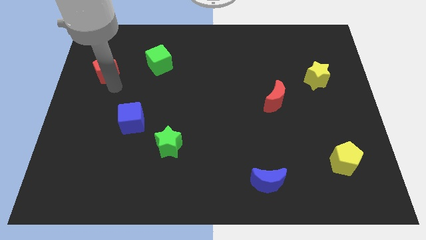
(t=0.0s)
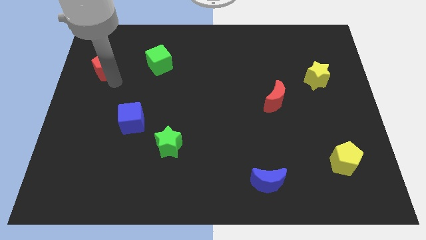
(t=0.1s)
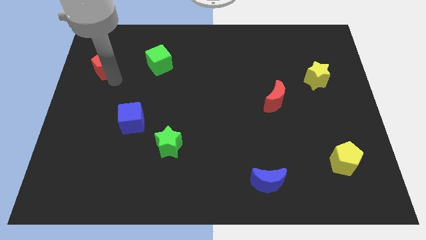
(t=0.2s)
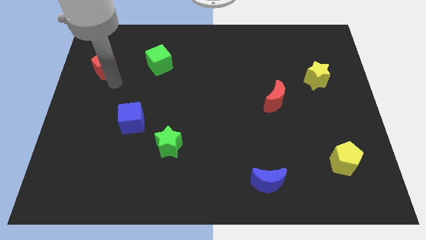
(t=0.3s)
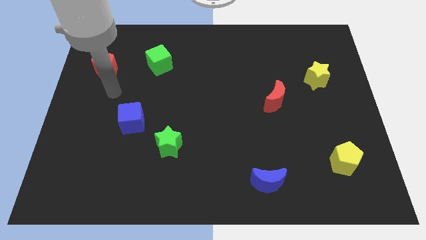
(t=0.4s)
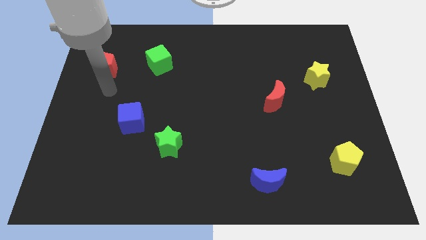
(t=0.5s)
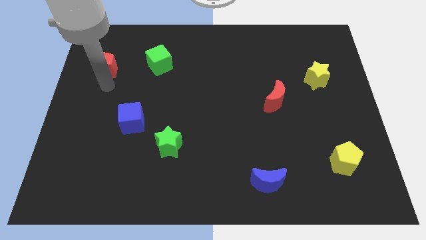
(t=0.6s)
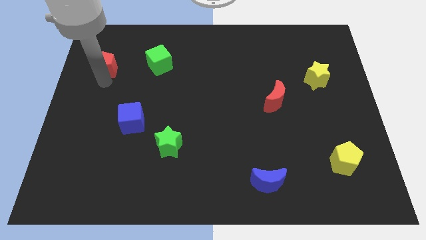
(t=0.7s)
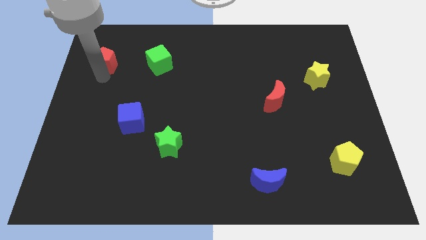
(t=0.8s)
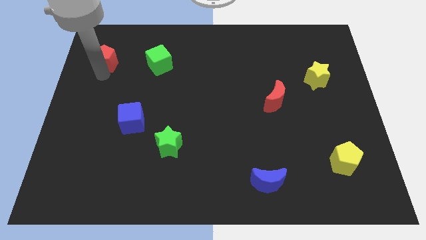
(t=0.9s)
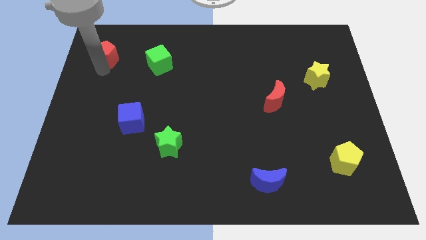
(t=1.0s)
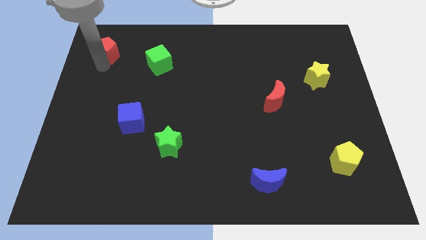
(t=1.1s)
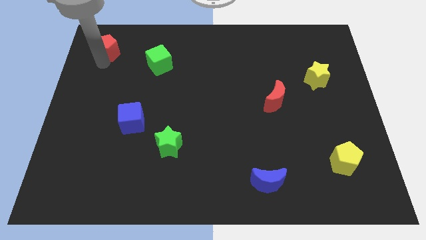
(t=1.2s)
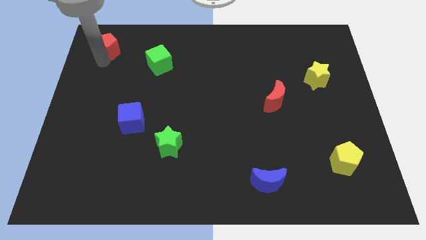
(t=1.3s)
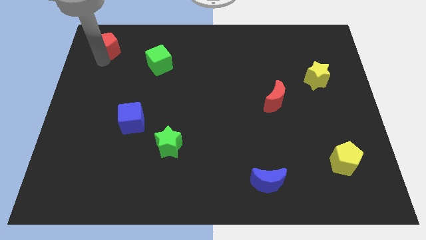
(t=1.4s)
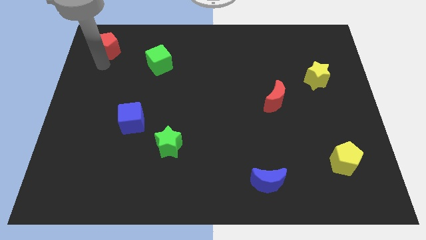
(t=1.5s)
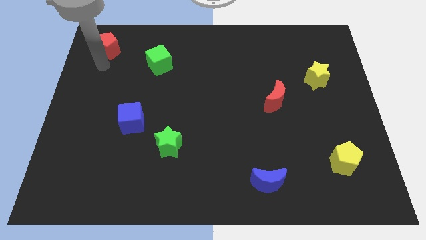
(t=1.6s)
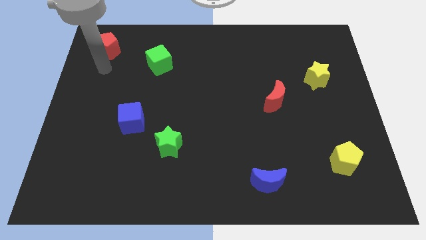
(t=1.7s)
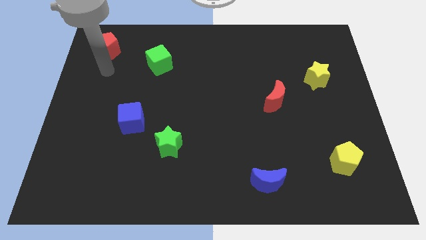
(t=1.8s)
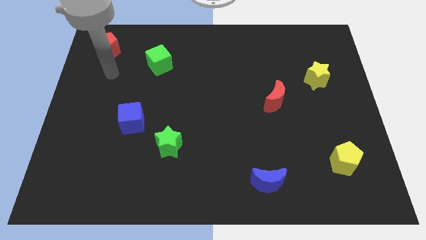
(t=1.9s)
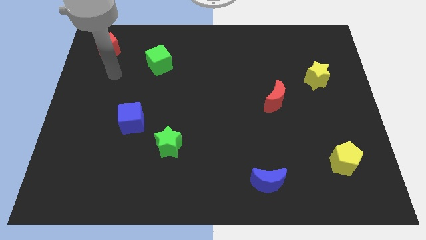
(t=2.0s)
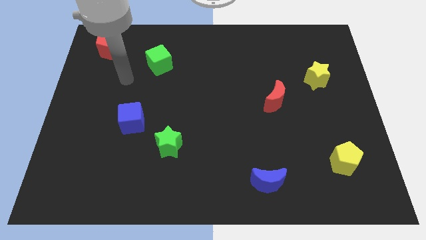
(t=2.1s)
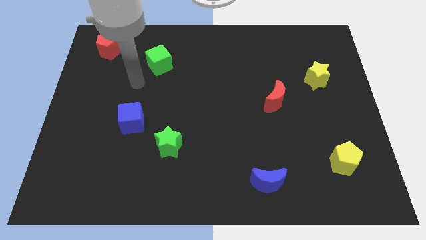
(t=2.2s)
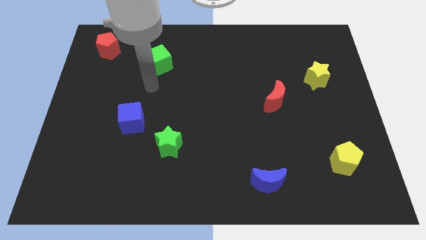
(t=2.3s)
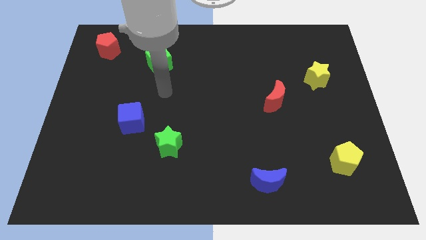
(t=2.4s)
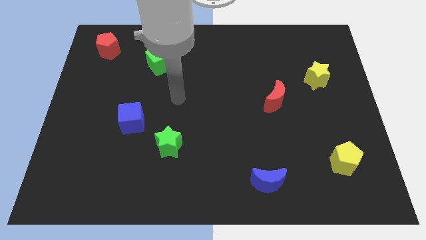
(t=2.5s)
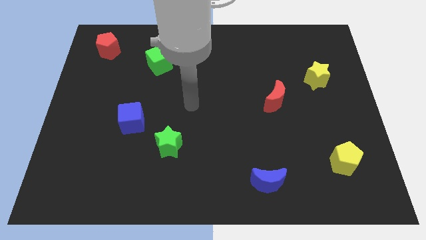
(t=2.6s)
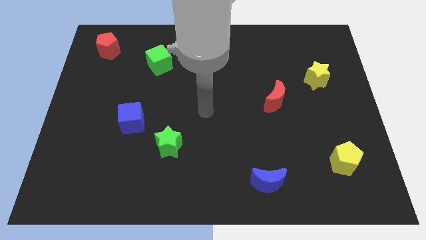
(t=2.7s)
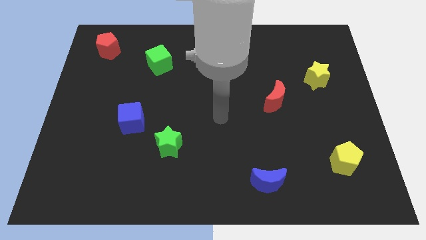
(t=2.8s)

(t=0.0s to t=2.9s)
place the red pentagon diagonally above the cube

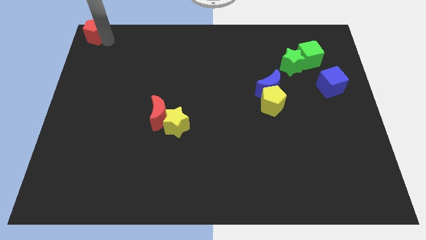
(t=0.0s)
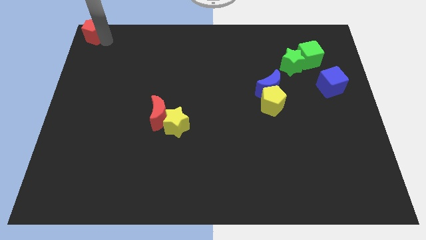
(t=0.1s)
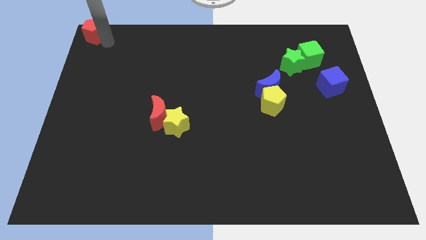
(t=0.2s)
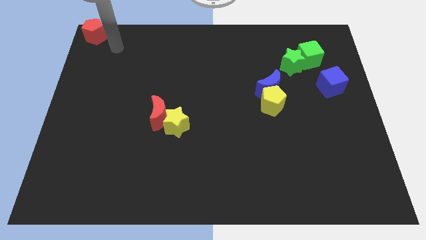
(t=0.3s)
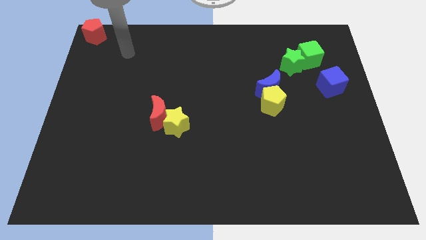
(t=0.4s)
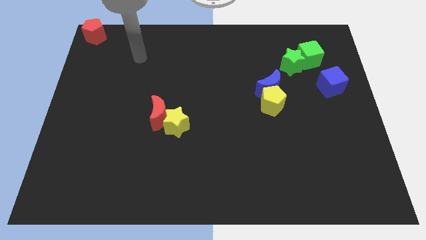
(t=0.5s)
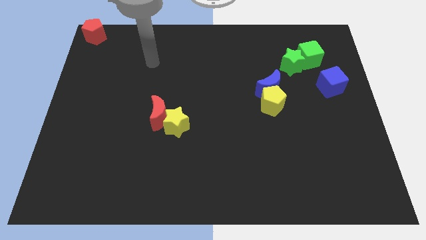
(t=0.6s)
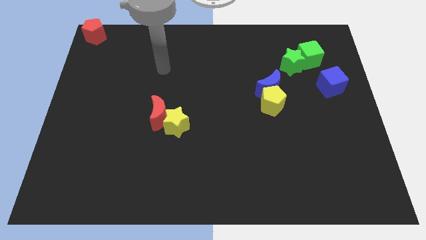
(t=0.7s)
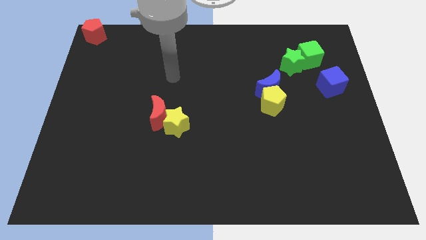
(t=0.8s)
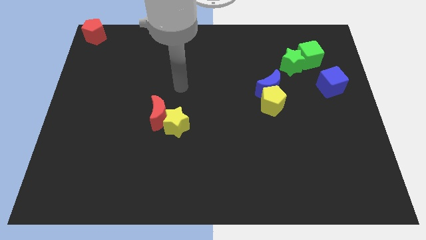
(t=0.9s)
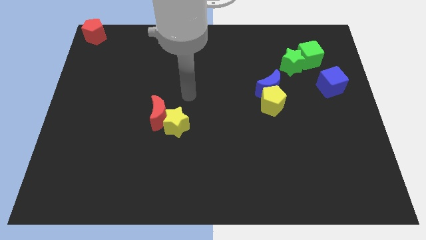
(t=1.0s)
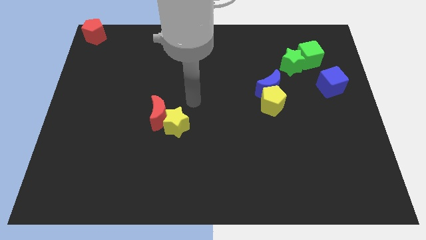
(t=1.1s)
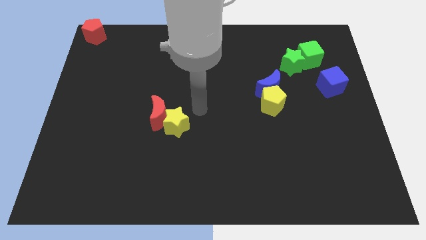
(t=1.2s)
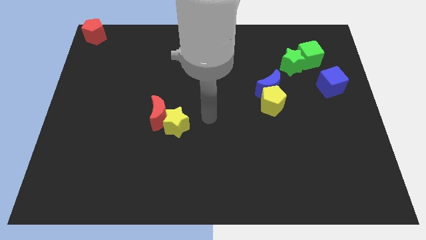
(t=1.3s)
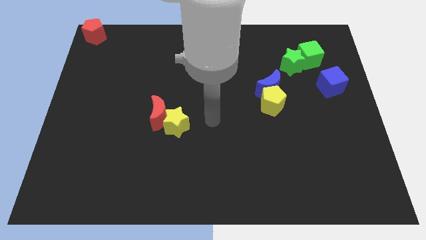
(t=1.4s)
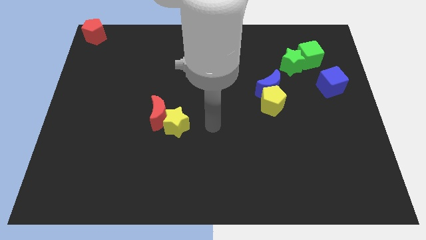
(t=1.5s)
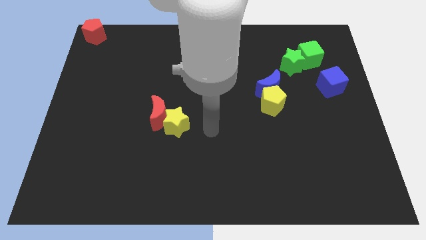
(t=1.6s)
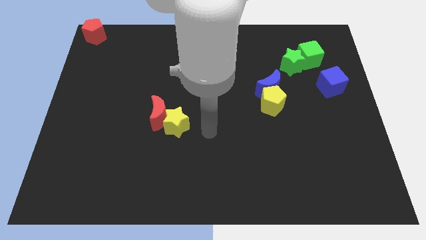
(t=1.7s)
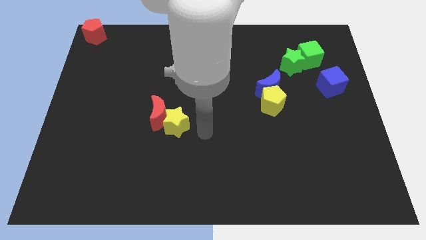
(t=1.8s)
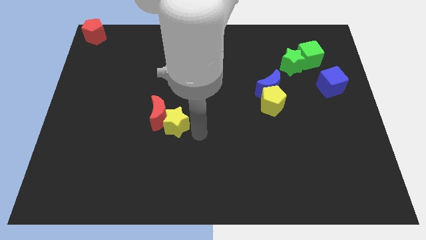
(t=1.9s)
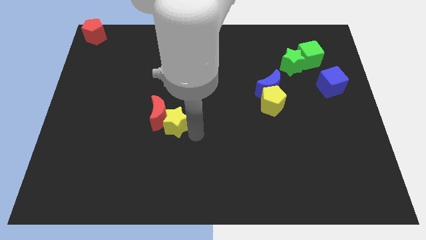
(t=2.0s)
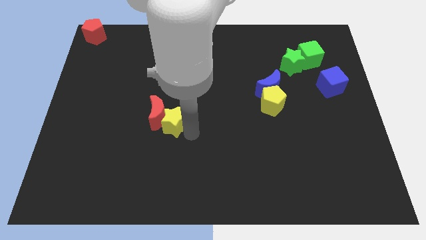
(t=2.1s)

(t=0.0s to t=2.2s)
place the arm to the right of the yellow star

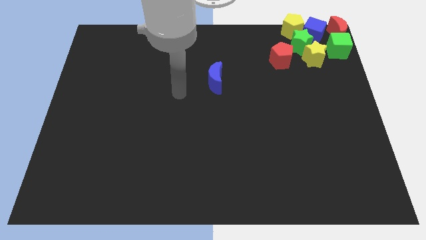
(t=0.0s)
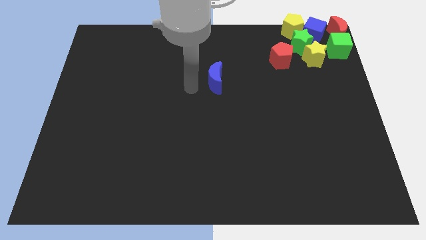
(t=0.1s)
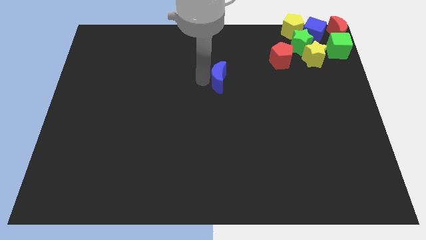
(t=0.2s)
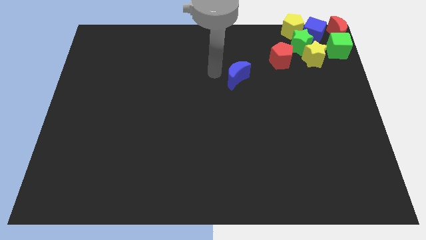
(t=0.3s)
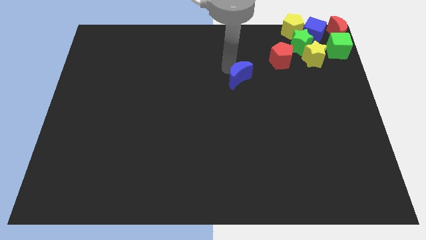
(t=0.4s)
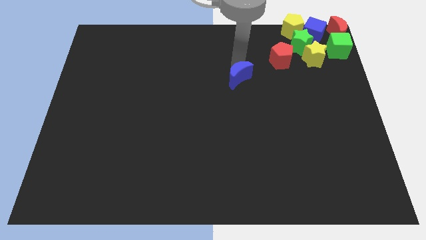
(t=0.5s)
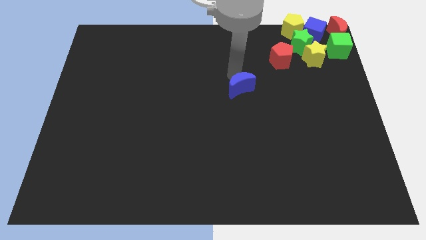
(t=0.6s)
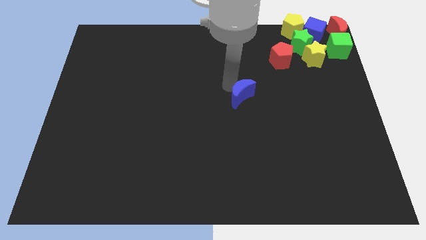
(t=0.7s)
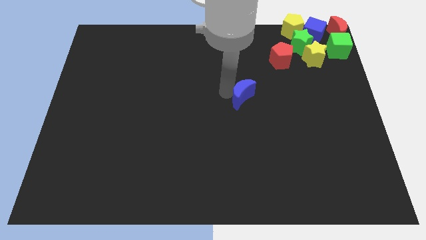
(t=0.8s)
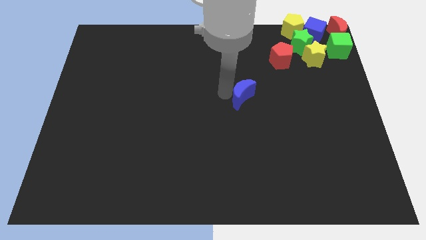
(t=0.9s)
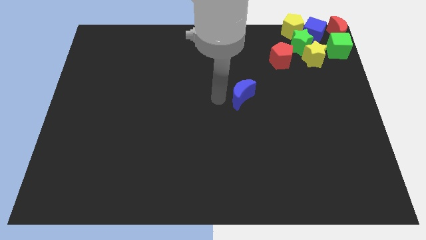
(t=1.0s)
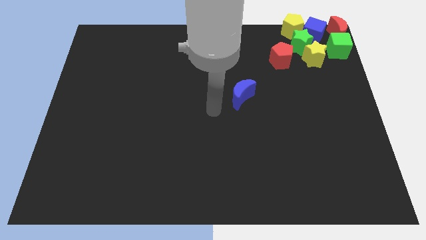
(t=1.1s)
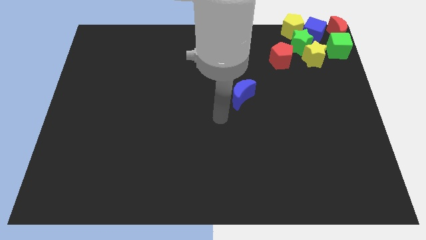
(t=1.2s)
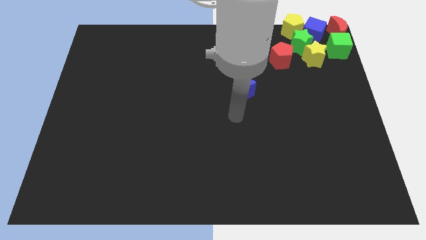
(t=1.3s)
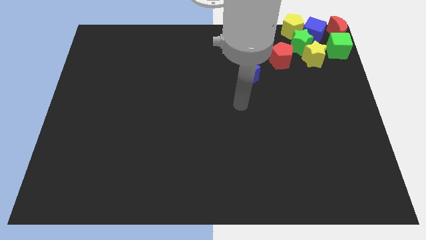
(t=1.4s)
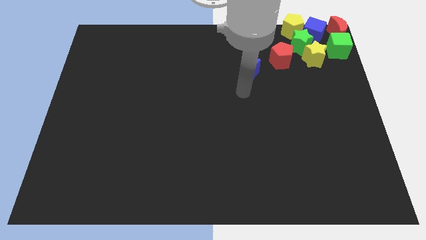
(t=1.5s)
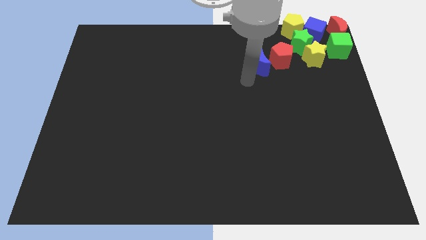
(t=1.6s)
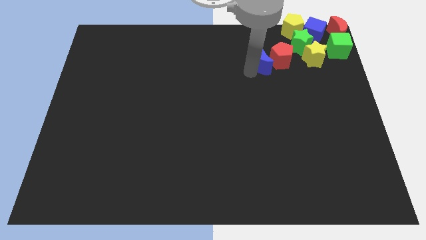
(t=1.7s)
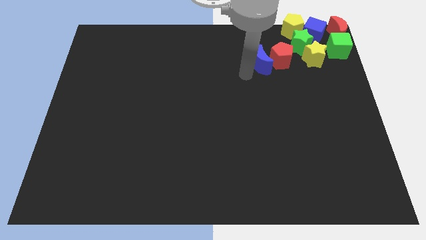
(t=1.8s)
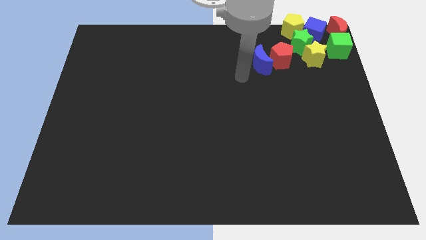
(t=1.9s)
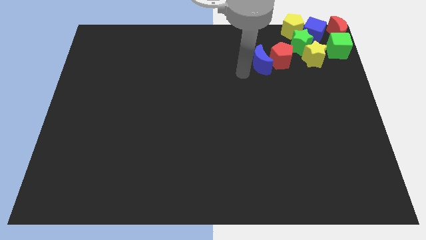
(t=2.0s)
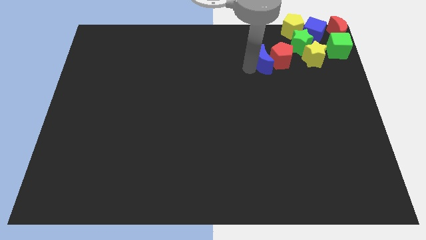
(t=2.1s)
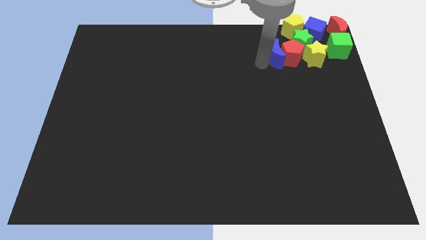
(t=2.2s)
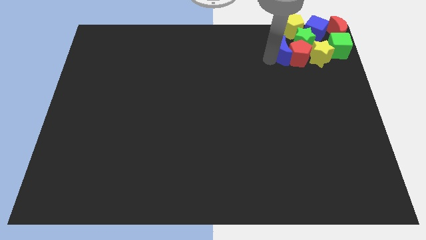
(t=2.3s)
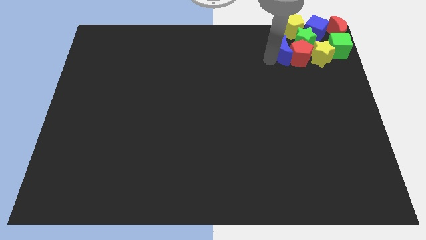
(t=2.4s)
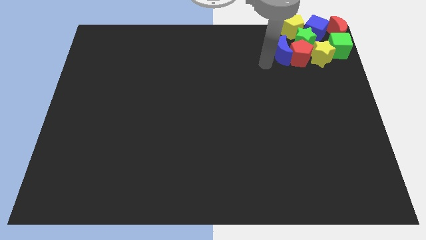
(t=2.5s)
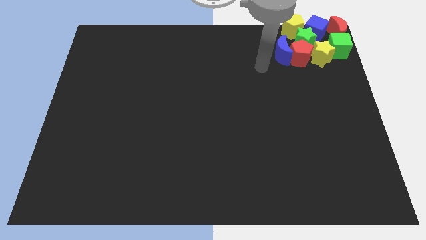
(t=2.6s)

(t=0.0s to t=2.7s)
push blue moon into left of red pentagon

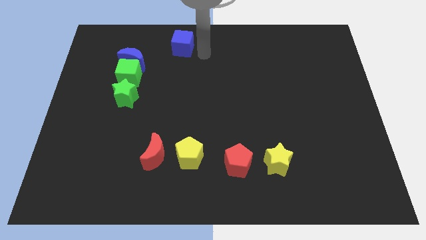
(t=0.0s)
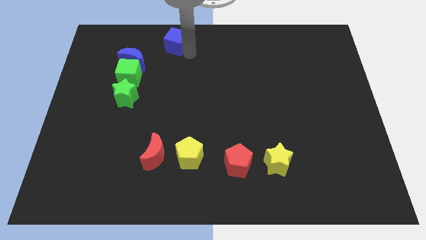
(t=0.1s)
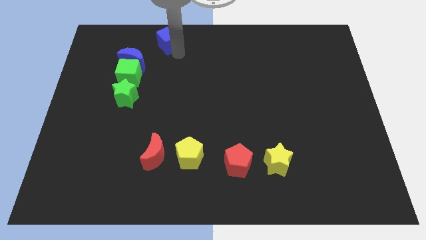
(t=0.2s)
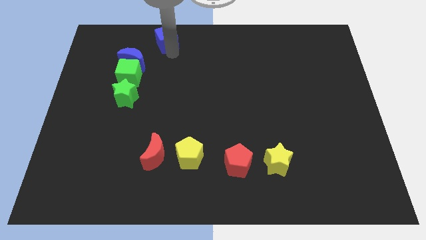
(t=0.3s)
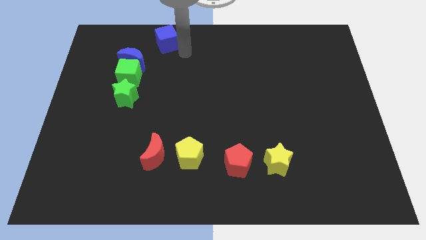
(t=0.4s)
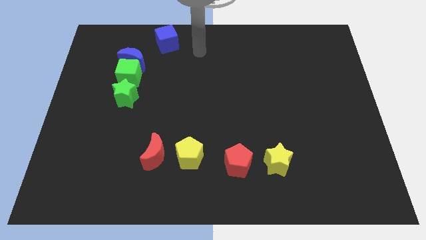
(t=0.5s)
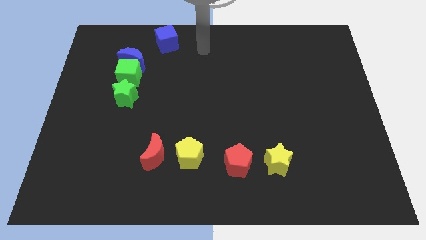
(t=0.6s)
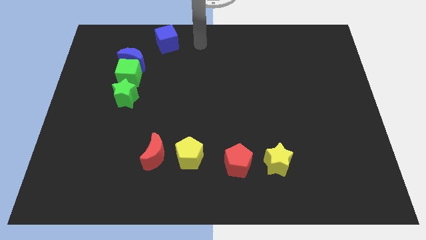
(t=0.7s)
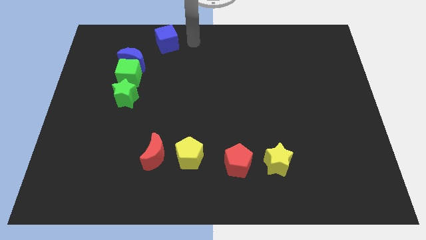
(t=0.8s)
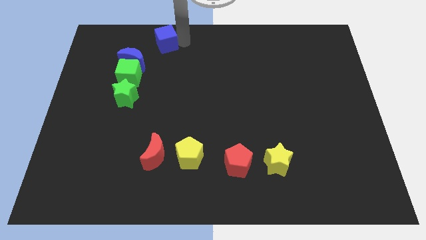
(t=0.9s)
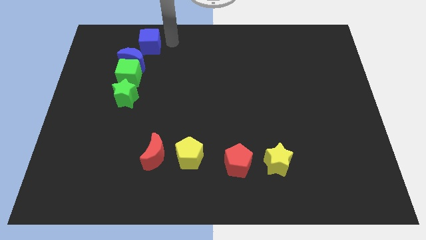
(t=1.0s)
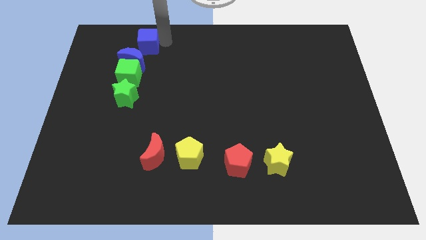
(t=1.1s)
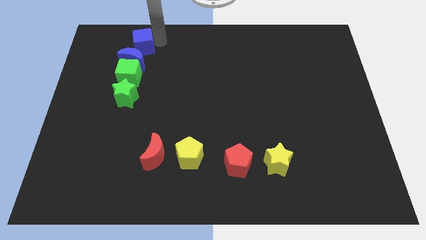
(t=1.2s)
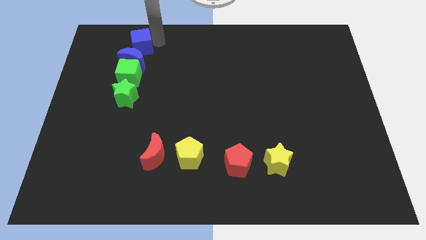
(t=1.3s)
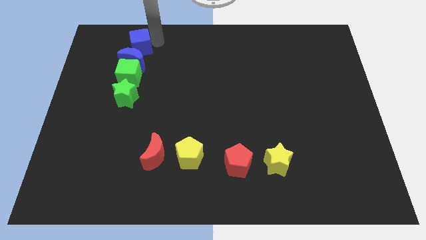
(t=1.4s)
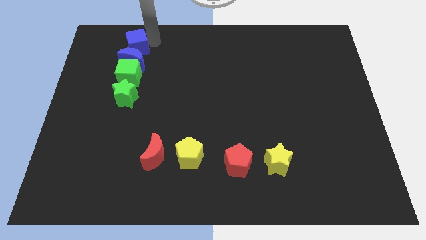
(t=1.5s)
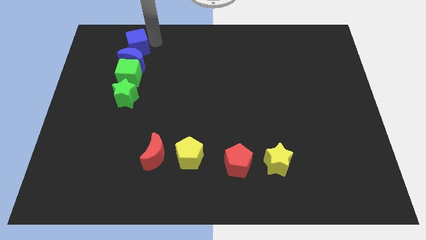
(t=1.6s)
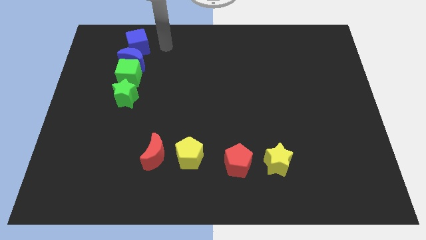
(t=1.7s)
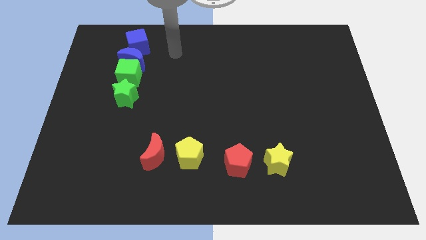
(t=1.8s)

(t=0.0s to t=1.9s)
move the blue cube towards top left
